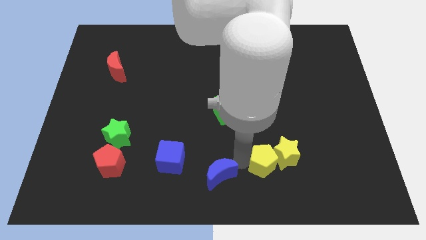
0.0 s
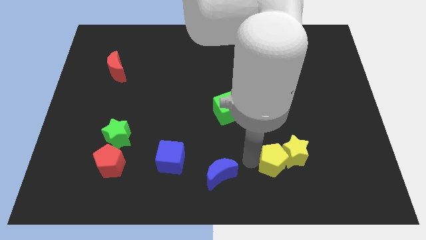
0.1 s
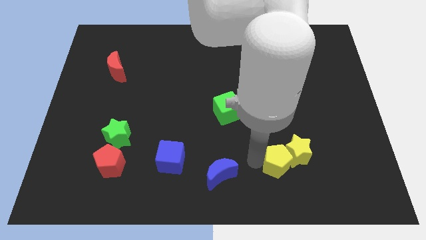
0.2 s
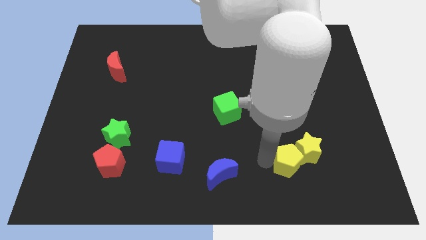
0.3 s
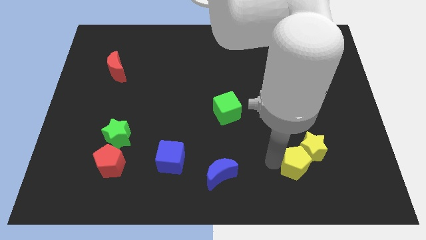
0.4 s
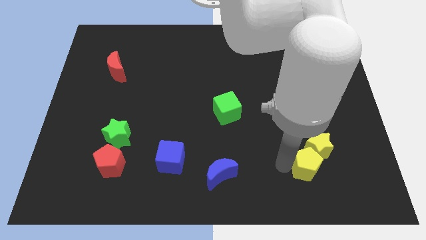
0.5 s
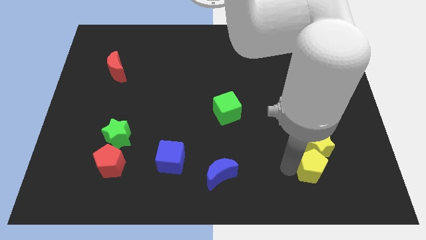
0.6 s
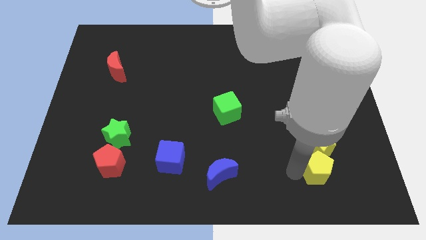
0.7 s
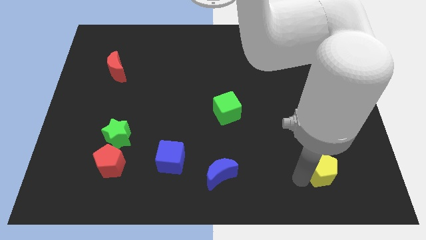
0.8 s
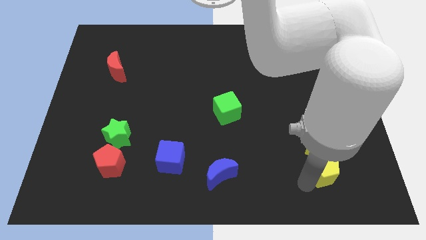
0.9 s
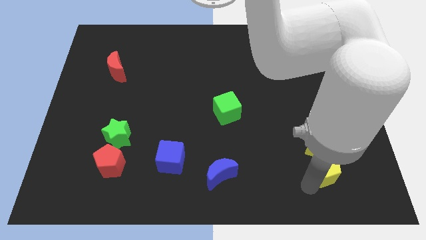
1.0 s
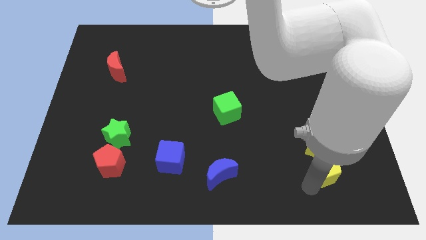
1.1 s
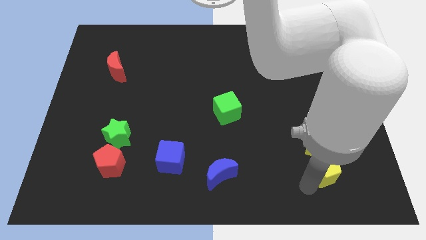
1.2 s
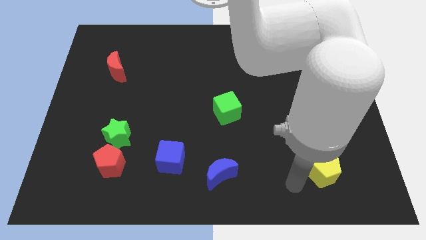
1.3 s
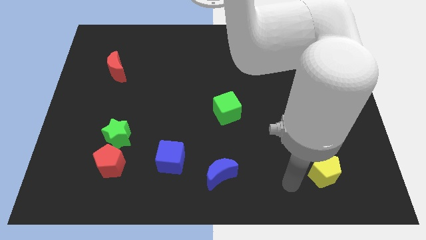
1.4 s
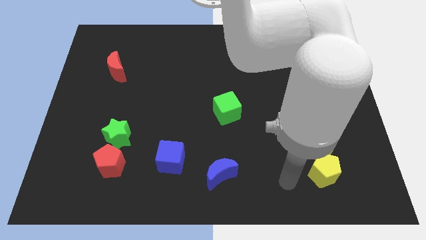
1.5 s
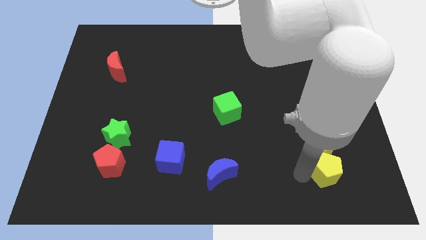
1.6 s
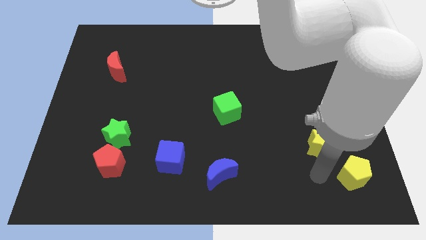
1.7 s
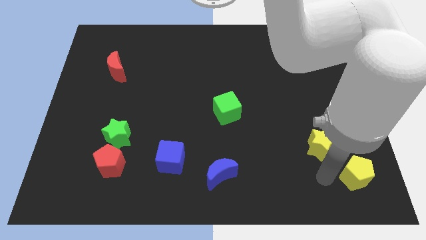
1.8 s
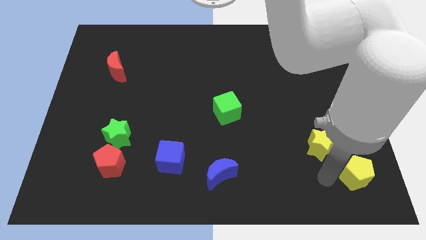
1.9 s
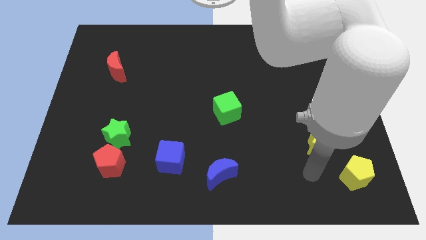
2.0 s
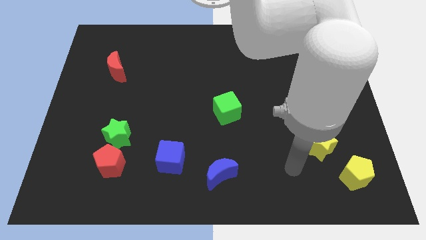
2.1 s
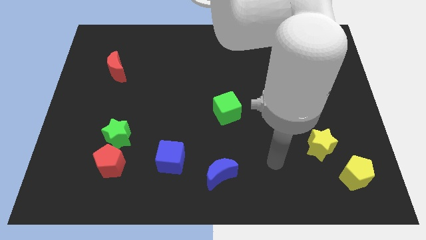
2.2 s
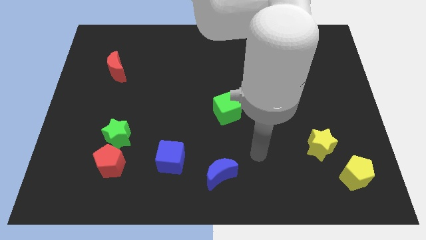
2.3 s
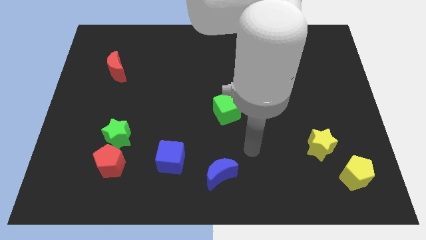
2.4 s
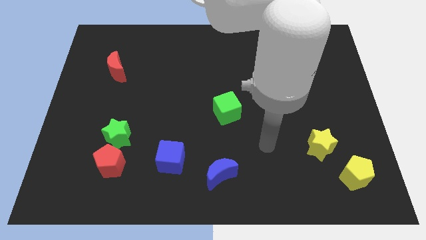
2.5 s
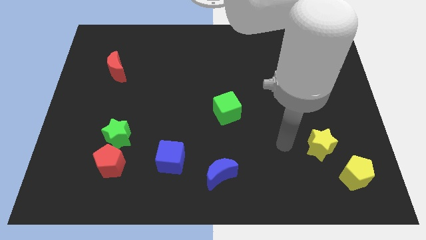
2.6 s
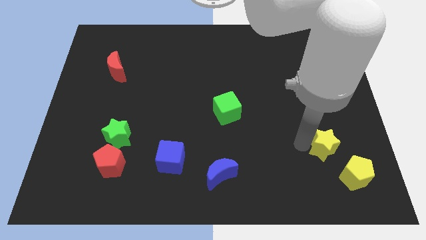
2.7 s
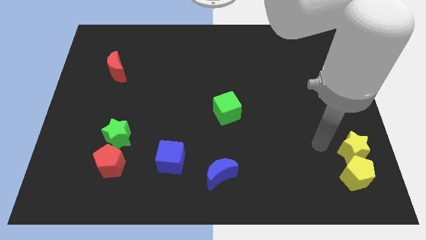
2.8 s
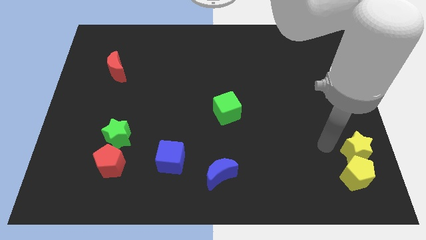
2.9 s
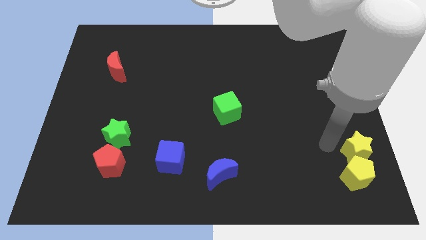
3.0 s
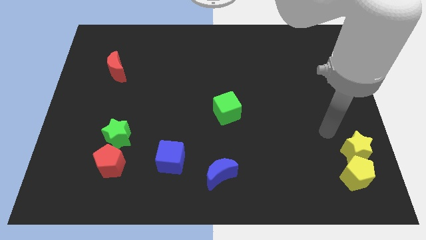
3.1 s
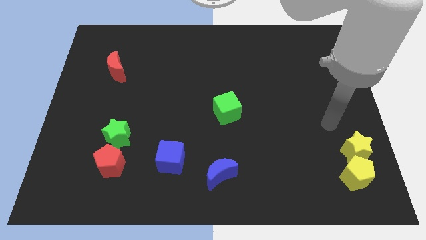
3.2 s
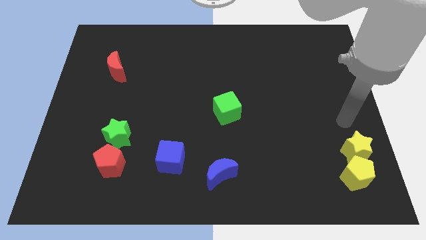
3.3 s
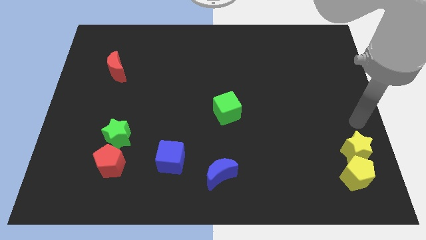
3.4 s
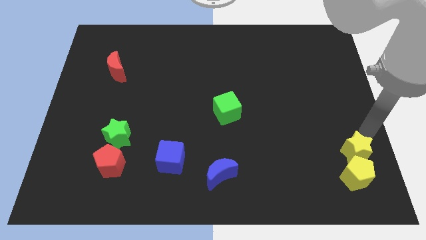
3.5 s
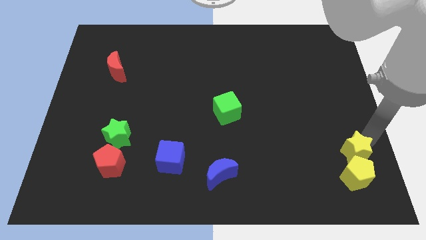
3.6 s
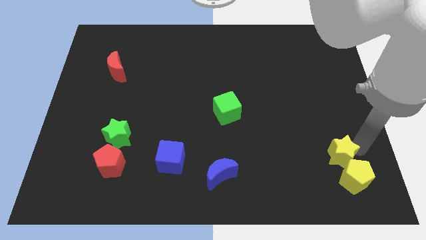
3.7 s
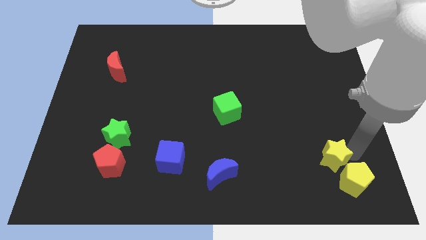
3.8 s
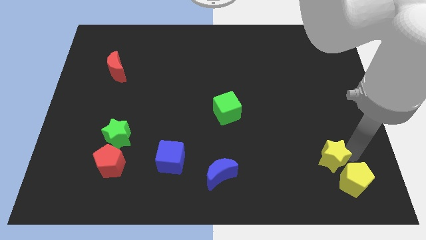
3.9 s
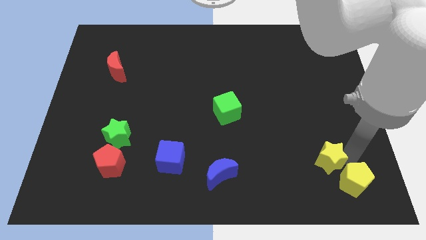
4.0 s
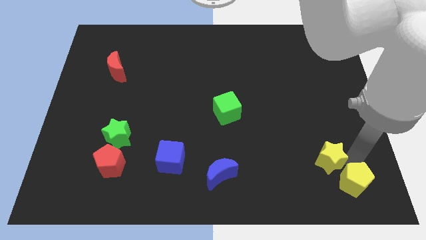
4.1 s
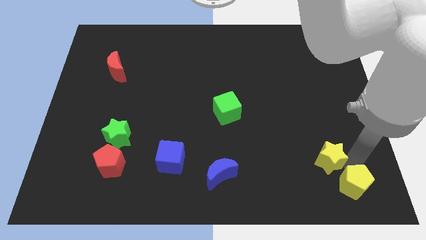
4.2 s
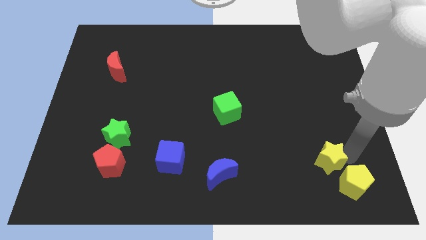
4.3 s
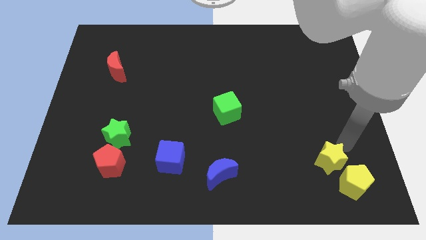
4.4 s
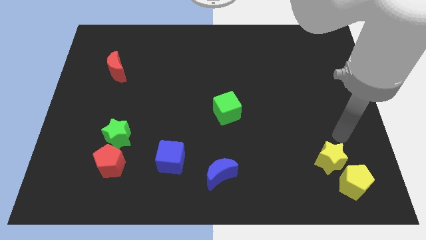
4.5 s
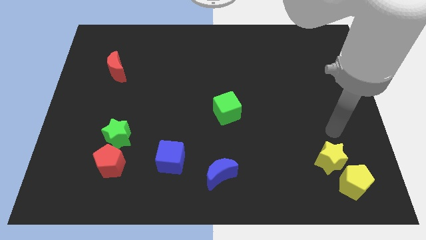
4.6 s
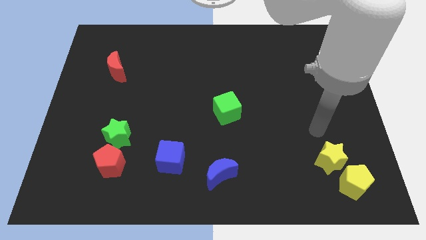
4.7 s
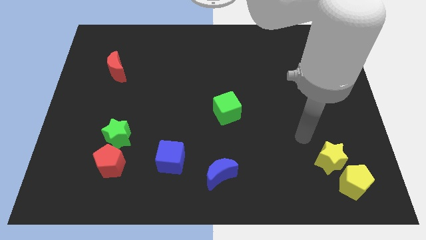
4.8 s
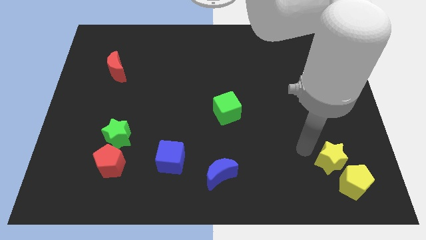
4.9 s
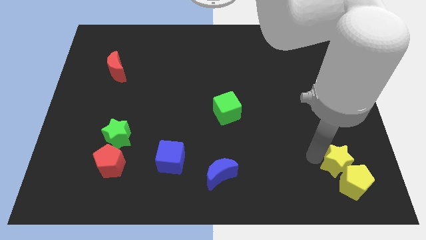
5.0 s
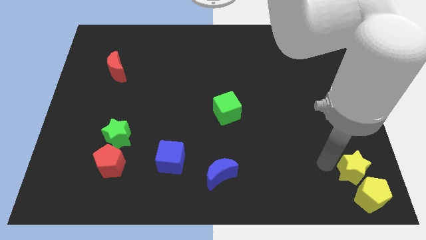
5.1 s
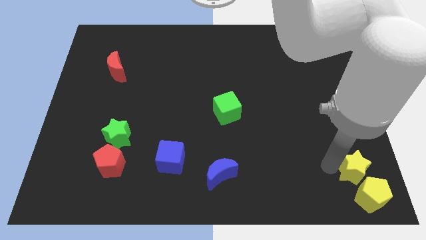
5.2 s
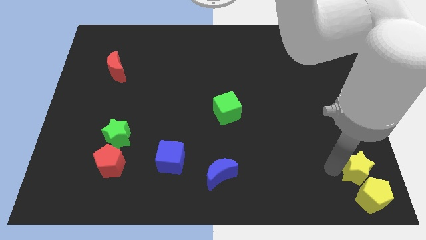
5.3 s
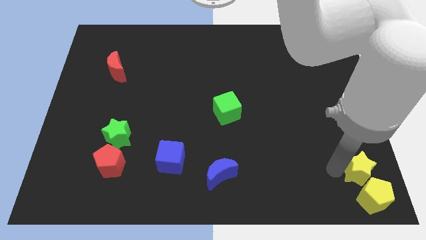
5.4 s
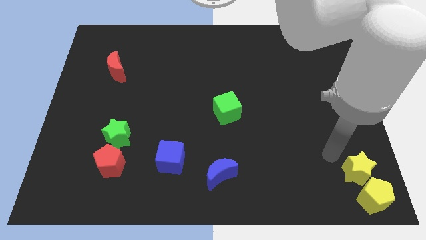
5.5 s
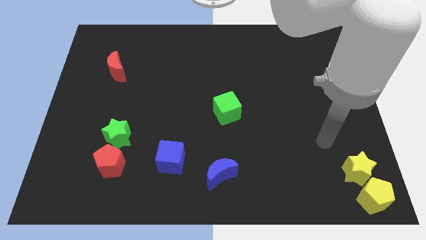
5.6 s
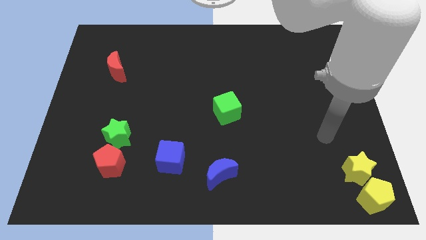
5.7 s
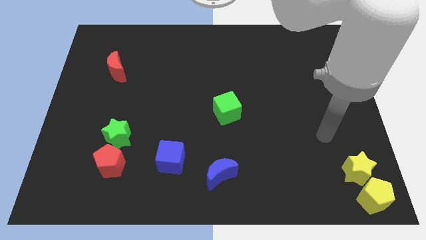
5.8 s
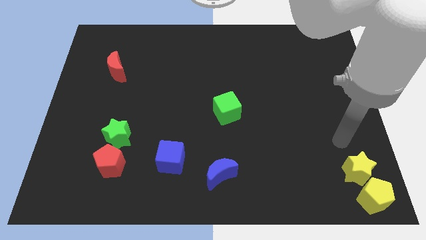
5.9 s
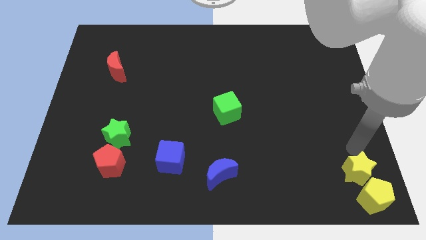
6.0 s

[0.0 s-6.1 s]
push the yellow blocks towards the bottom right side

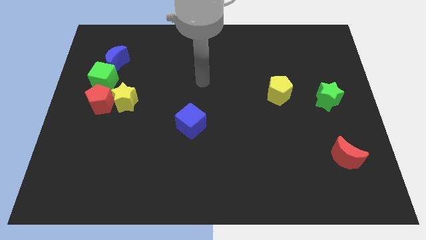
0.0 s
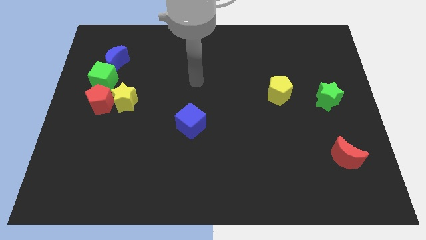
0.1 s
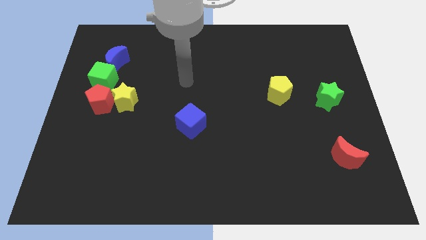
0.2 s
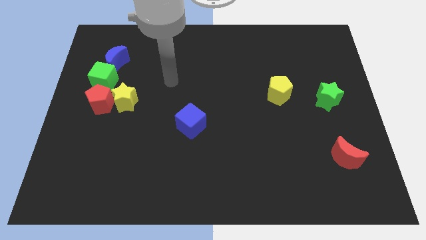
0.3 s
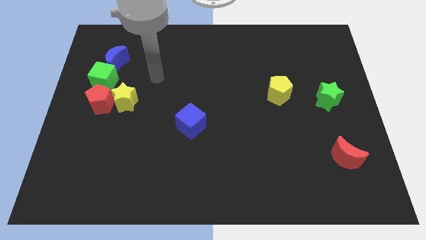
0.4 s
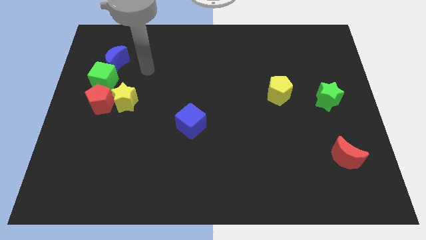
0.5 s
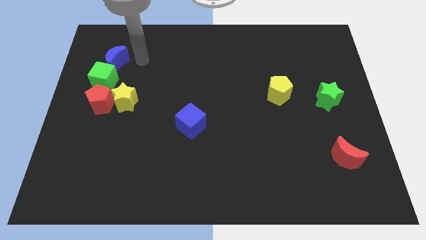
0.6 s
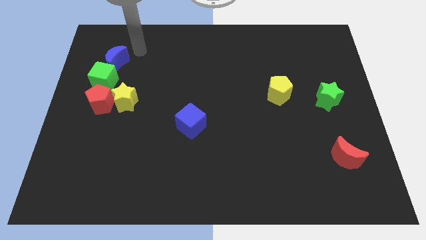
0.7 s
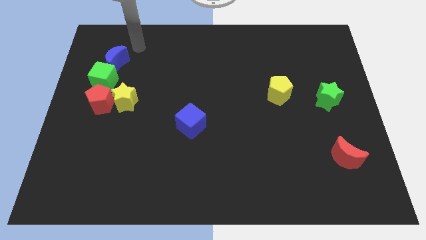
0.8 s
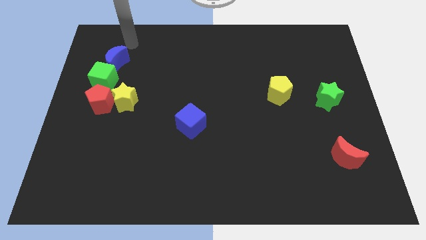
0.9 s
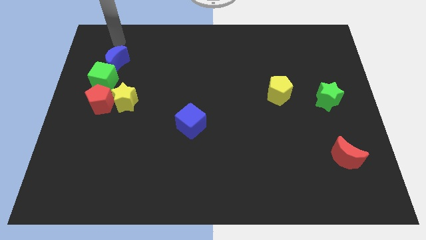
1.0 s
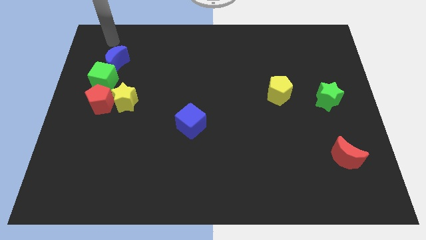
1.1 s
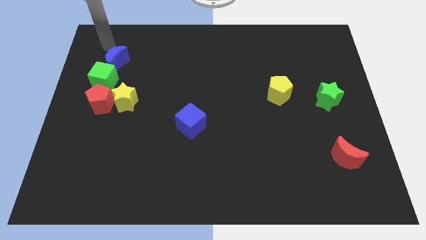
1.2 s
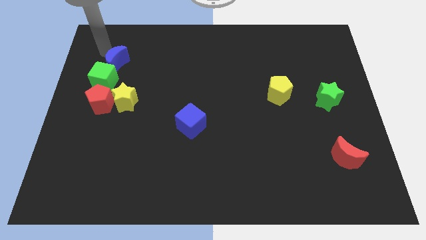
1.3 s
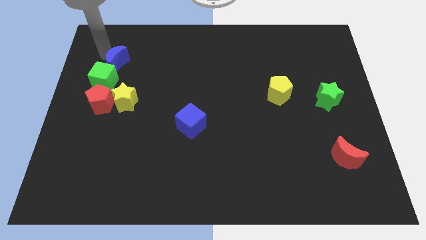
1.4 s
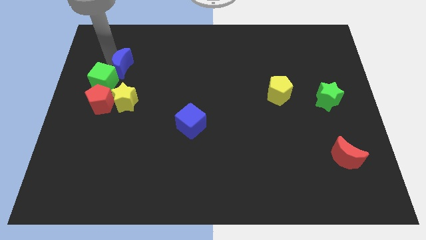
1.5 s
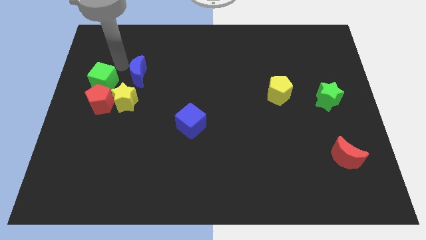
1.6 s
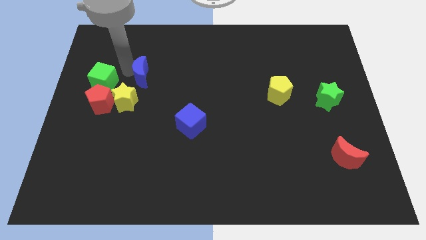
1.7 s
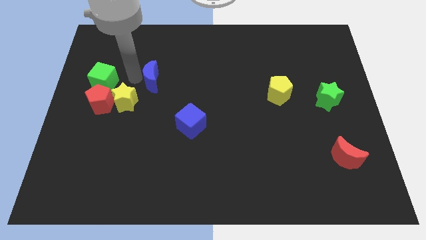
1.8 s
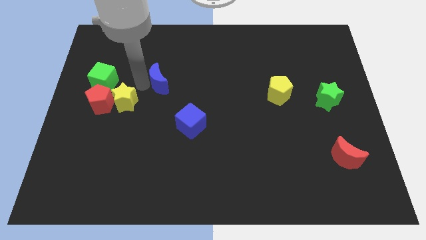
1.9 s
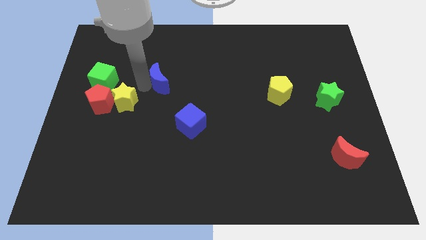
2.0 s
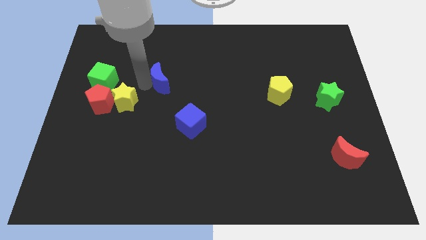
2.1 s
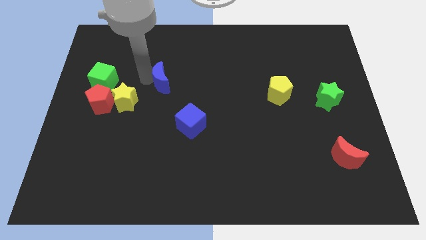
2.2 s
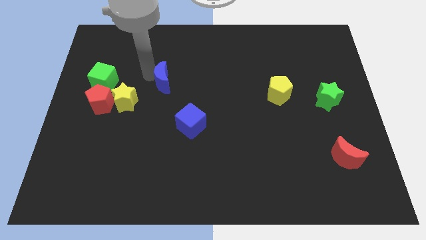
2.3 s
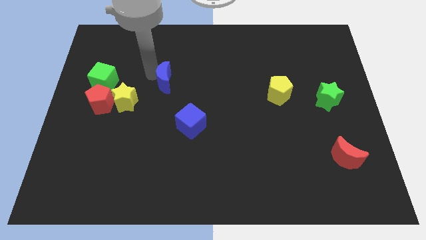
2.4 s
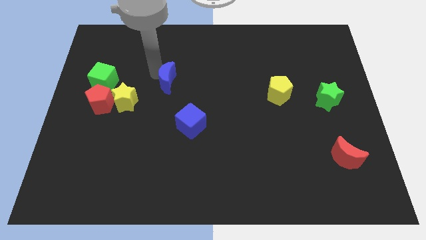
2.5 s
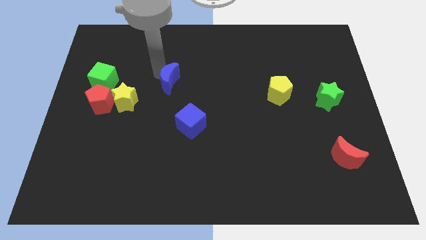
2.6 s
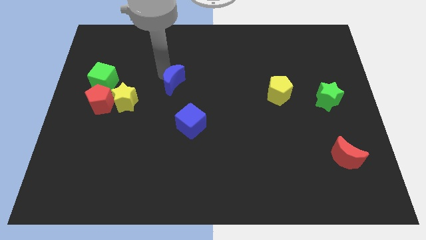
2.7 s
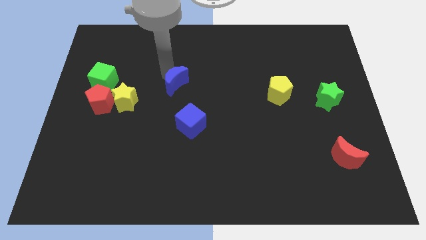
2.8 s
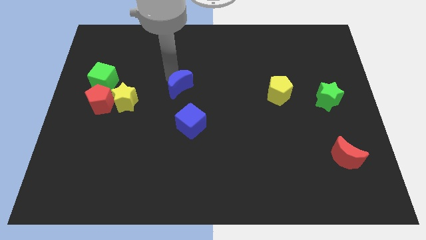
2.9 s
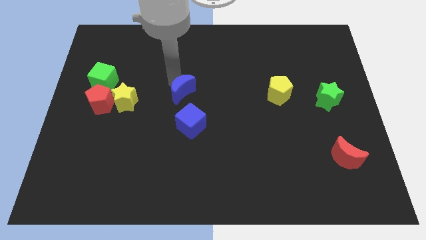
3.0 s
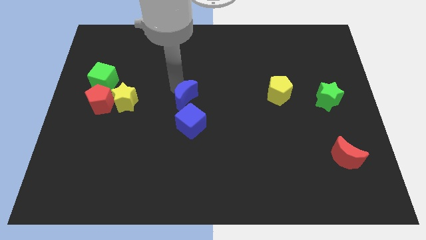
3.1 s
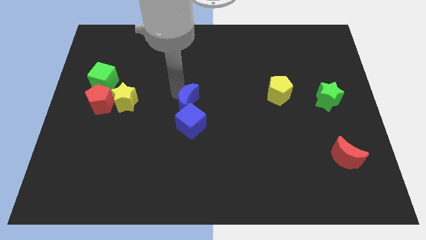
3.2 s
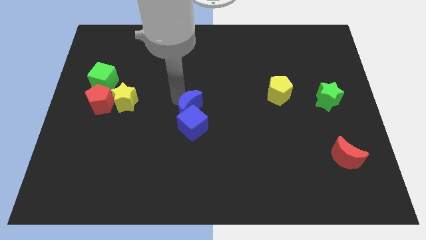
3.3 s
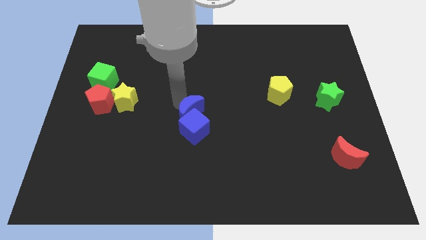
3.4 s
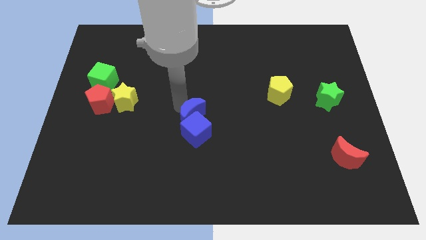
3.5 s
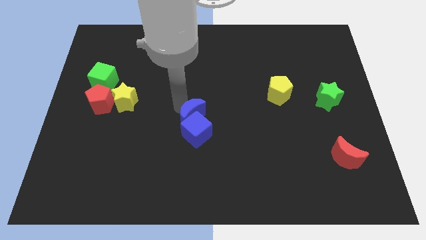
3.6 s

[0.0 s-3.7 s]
push the blue moon into blue cube
